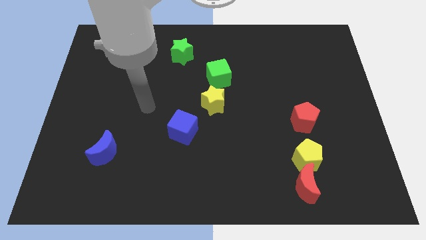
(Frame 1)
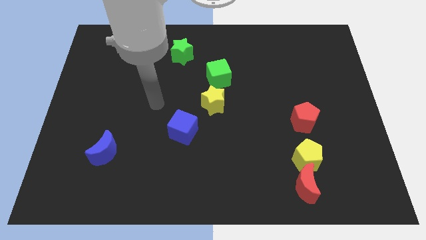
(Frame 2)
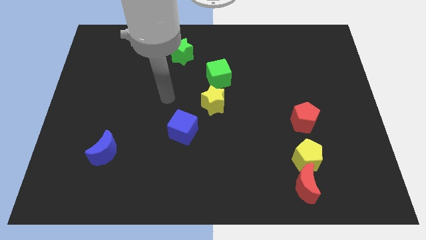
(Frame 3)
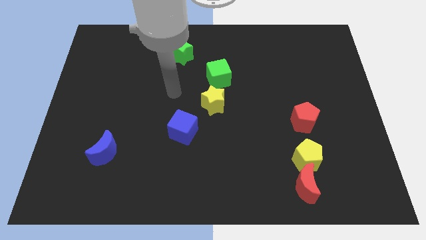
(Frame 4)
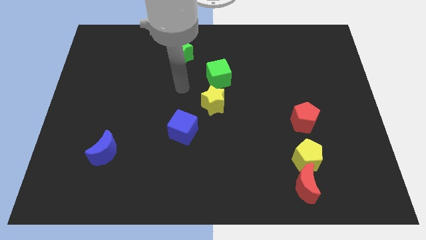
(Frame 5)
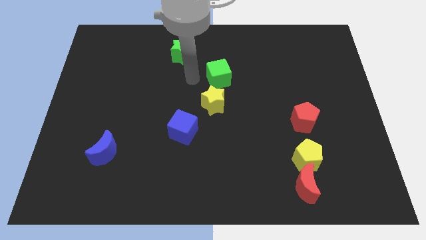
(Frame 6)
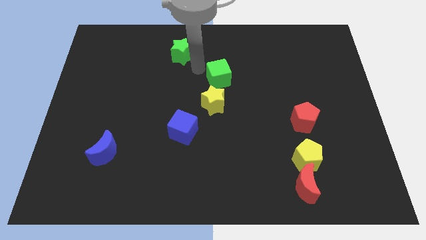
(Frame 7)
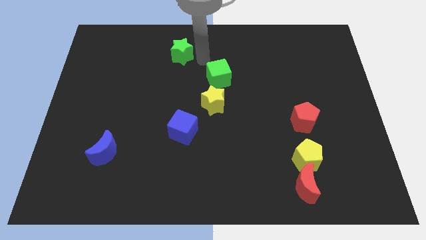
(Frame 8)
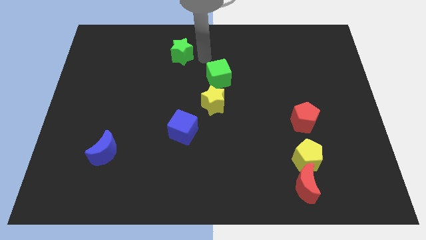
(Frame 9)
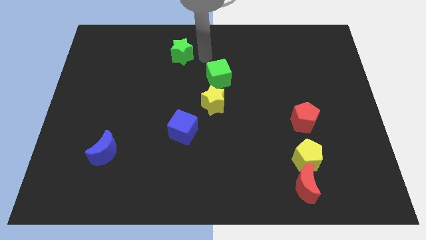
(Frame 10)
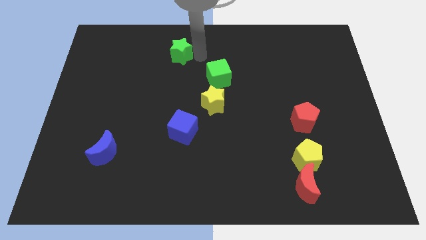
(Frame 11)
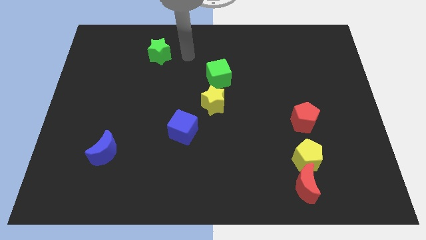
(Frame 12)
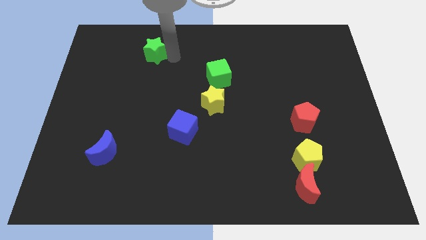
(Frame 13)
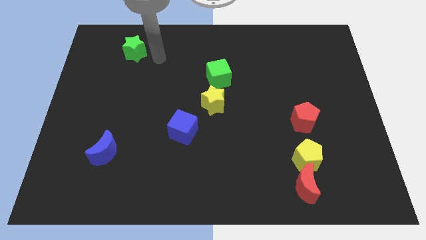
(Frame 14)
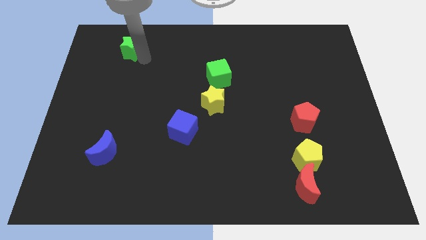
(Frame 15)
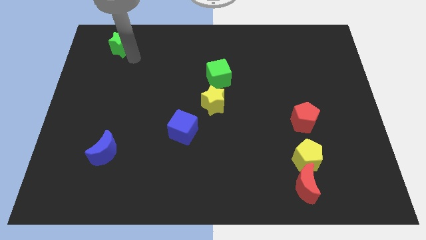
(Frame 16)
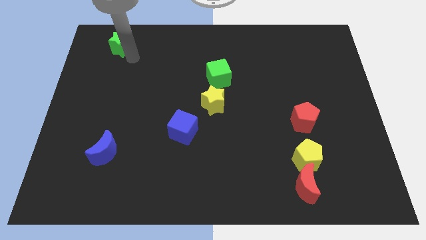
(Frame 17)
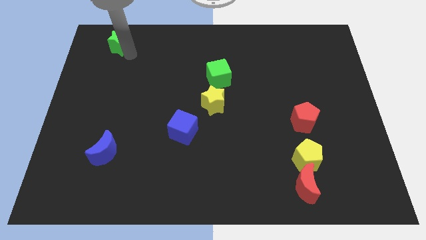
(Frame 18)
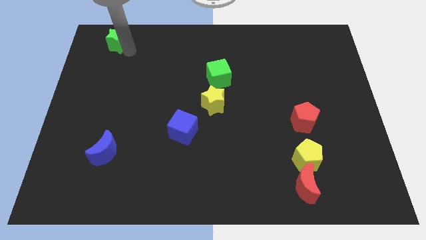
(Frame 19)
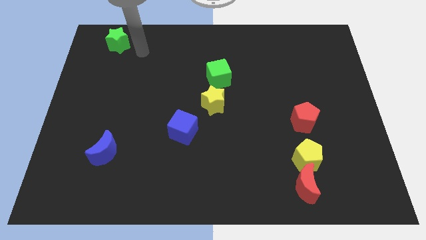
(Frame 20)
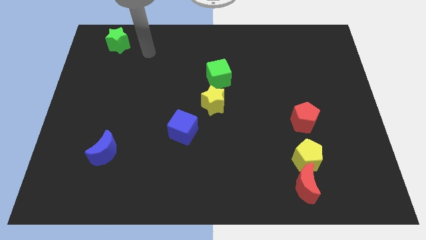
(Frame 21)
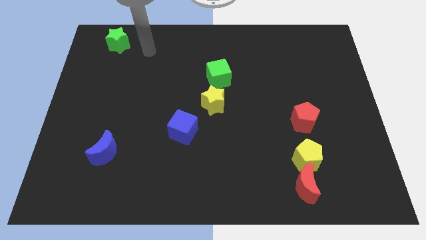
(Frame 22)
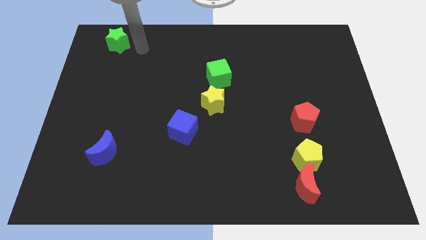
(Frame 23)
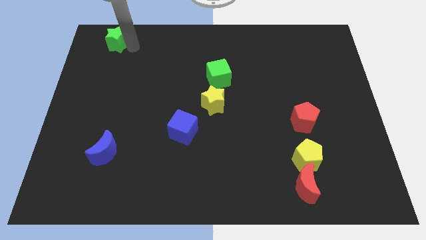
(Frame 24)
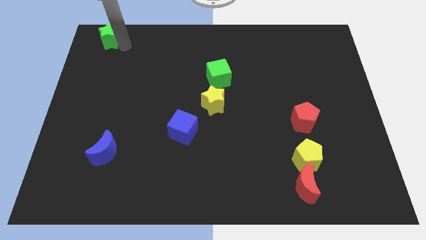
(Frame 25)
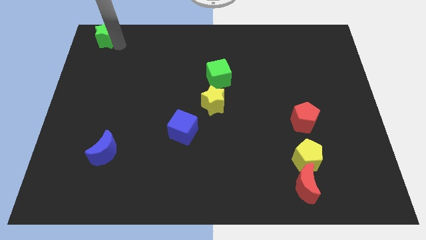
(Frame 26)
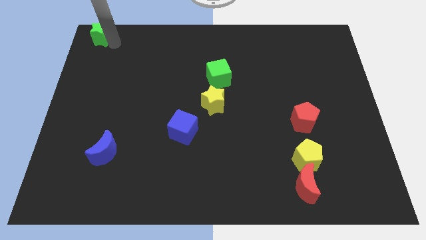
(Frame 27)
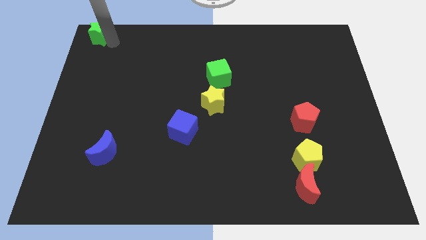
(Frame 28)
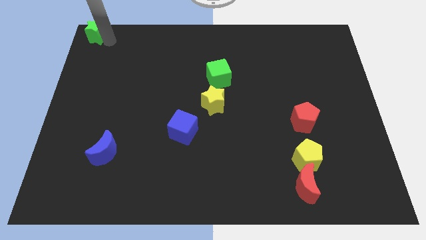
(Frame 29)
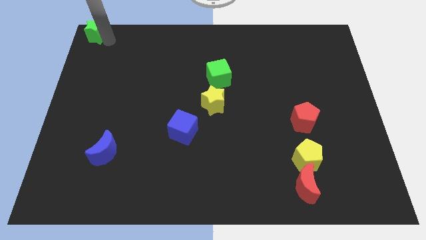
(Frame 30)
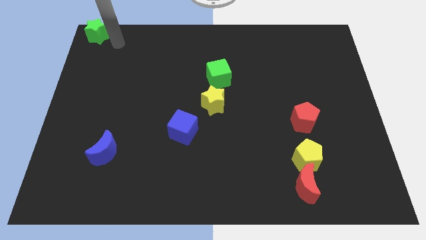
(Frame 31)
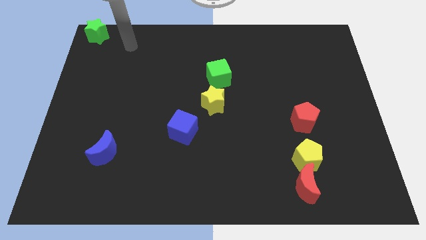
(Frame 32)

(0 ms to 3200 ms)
place the green star at the top left corner of the board

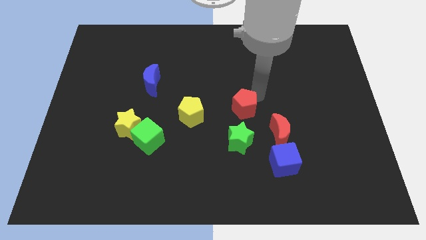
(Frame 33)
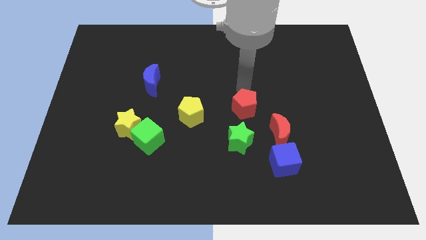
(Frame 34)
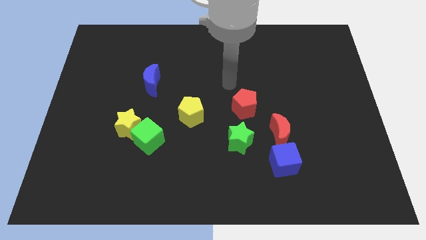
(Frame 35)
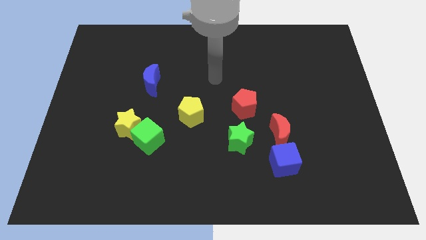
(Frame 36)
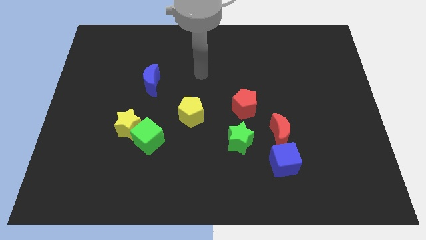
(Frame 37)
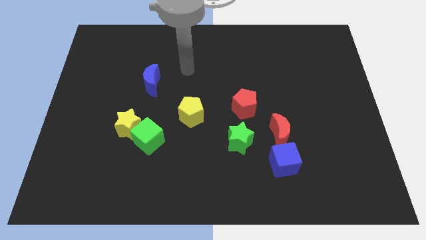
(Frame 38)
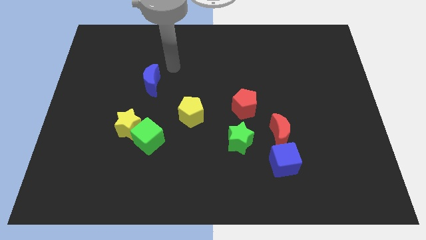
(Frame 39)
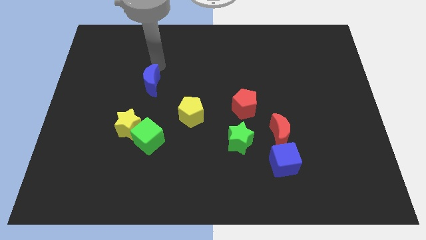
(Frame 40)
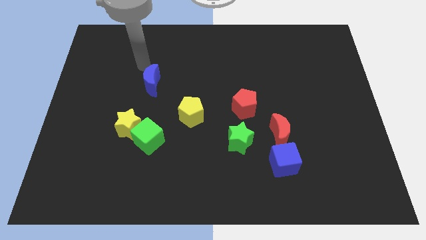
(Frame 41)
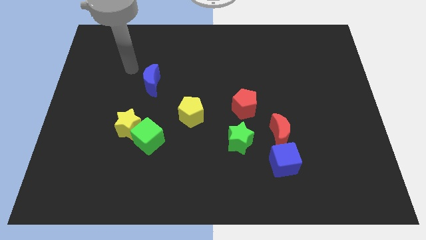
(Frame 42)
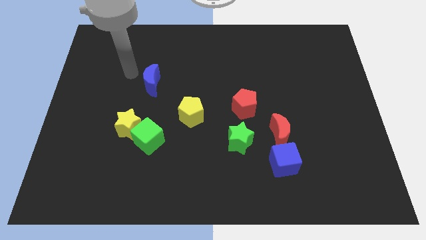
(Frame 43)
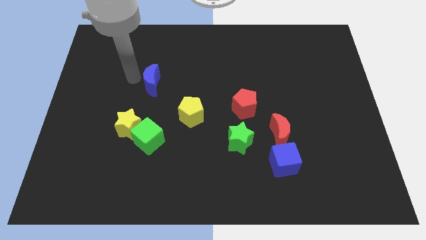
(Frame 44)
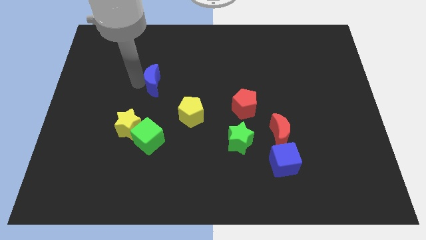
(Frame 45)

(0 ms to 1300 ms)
place your arm to the left of blue moon

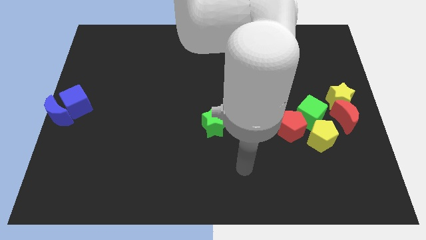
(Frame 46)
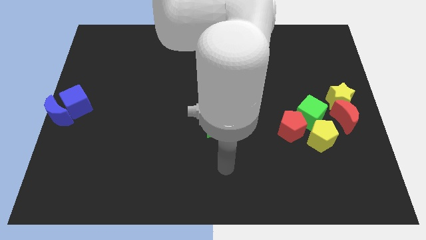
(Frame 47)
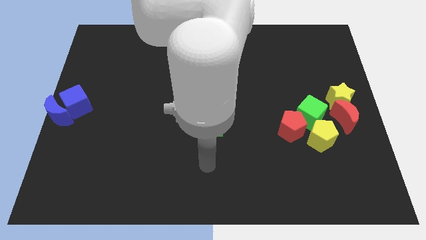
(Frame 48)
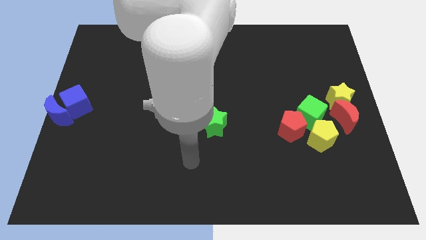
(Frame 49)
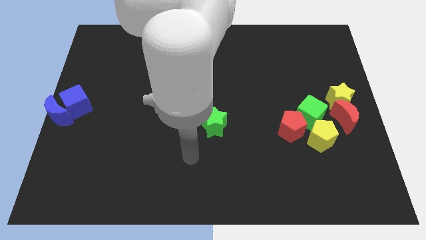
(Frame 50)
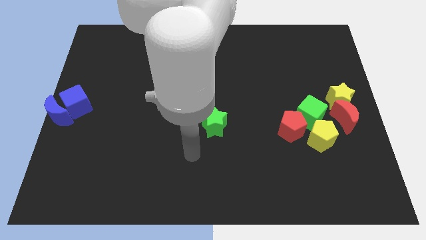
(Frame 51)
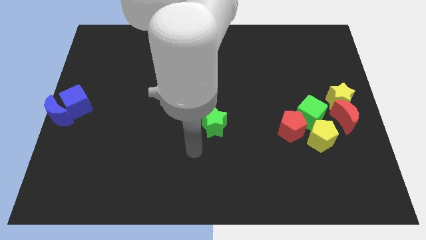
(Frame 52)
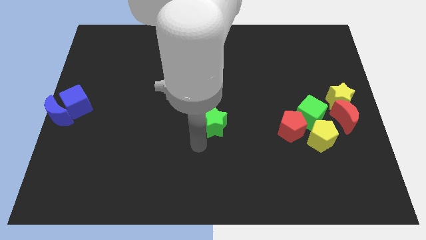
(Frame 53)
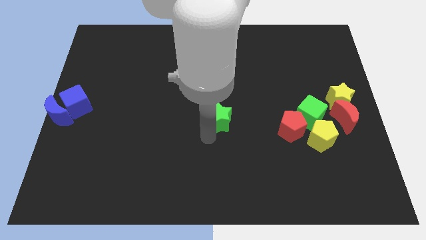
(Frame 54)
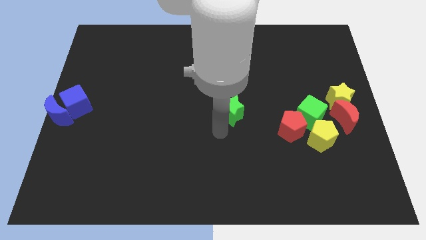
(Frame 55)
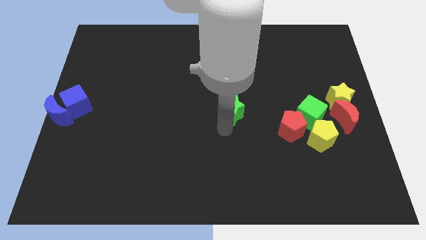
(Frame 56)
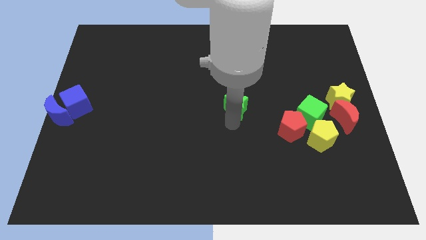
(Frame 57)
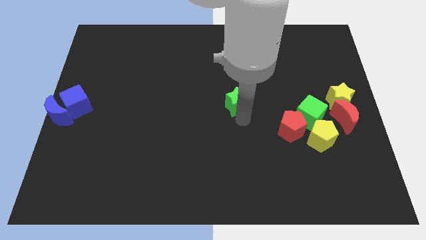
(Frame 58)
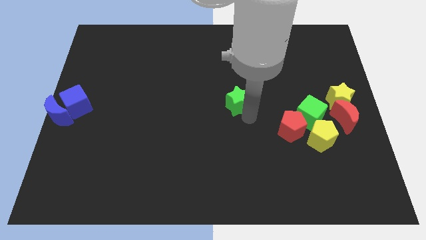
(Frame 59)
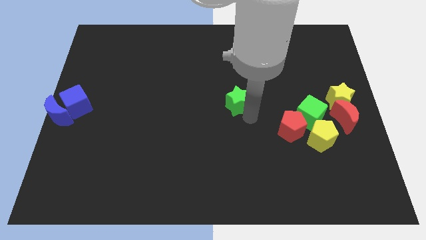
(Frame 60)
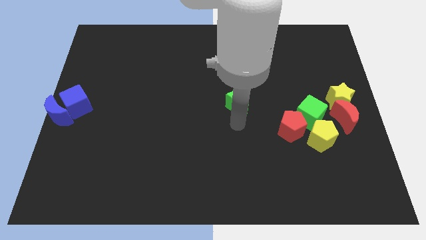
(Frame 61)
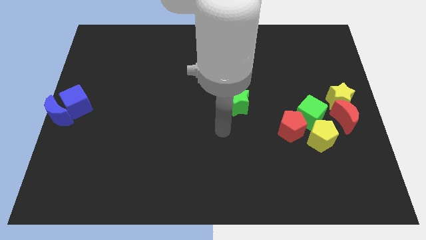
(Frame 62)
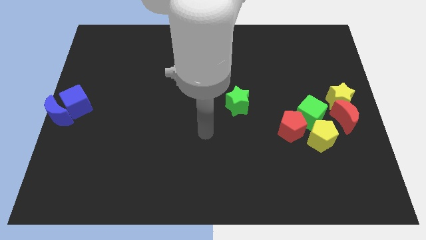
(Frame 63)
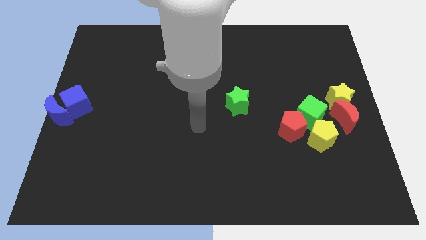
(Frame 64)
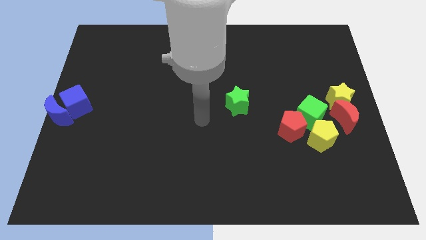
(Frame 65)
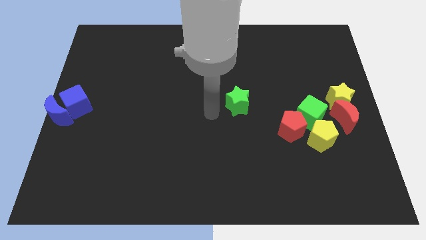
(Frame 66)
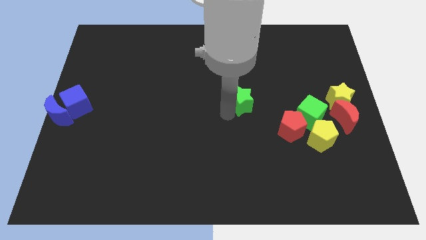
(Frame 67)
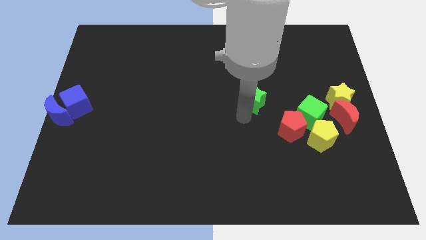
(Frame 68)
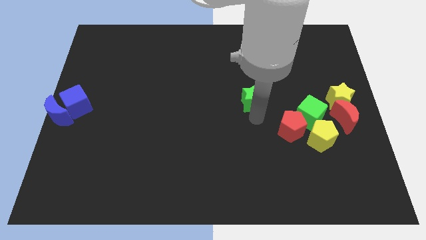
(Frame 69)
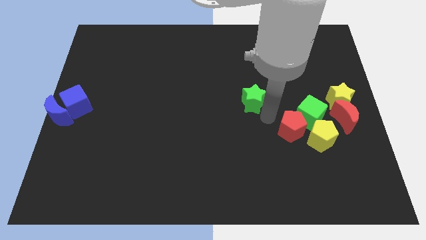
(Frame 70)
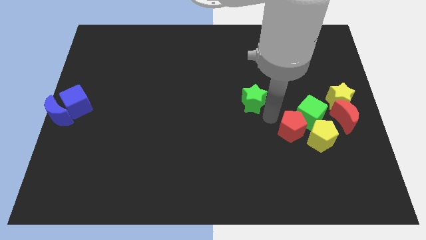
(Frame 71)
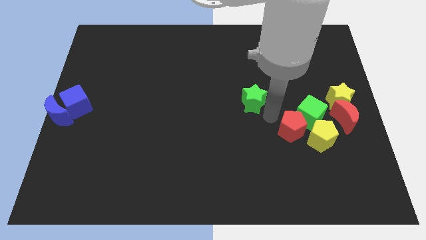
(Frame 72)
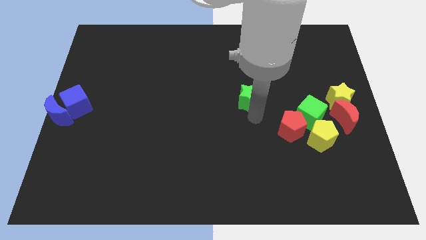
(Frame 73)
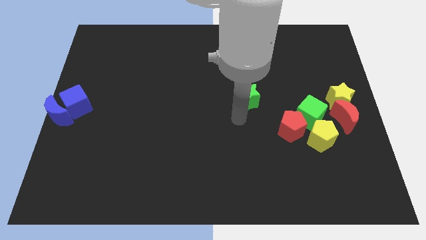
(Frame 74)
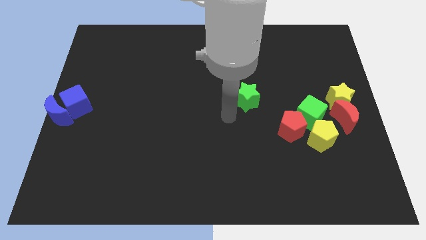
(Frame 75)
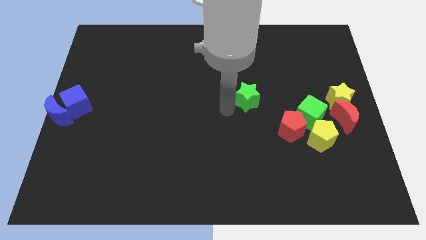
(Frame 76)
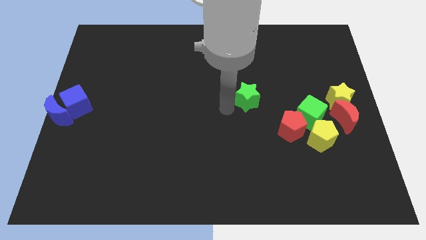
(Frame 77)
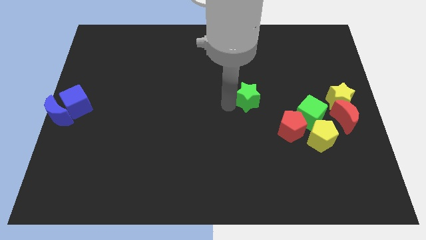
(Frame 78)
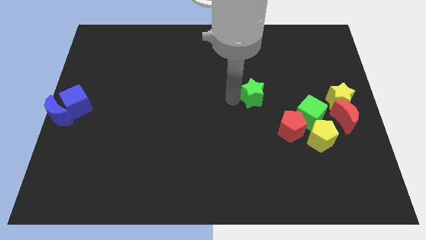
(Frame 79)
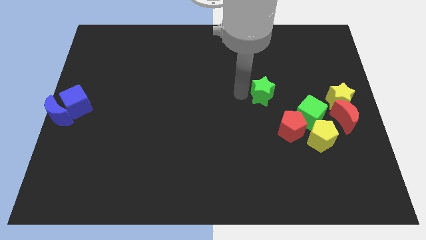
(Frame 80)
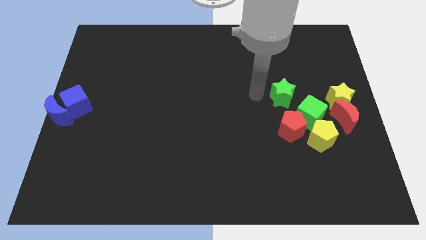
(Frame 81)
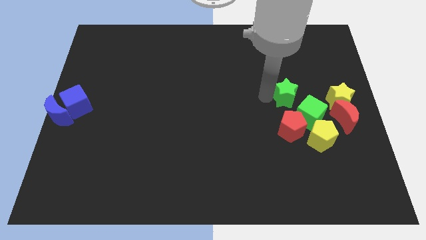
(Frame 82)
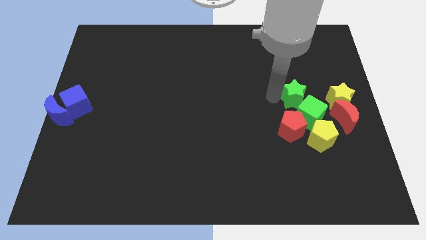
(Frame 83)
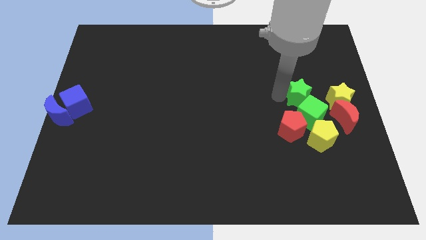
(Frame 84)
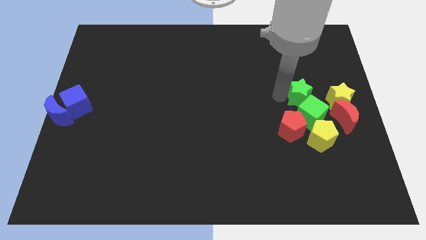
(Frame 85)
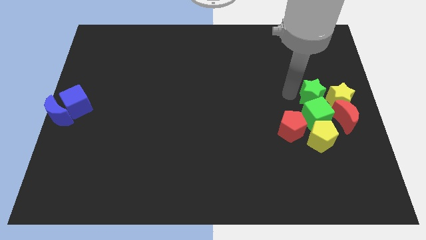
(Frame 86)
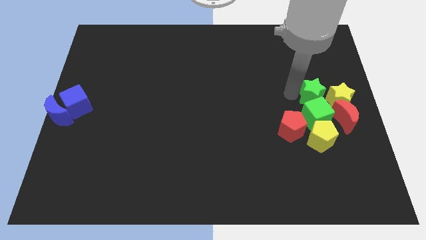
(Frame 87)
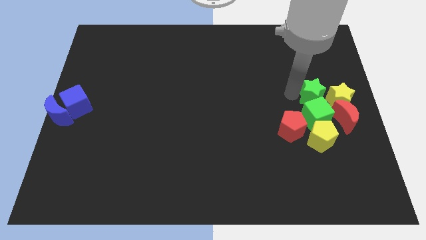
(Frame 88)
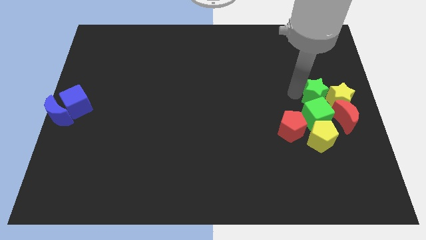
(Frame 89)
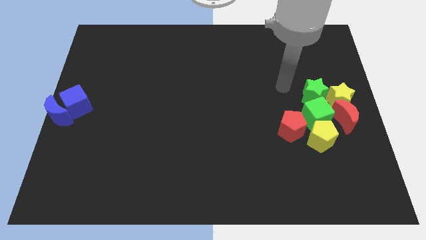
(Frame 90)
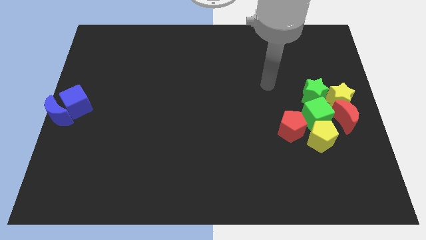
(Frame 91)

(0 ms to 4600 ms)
push the green star into the group of blocks
